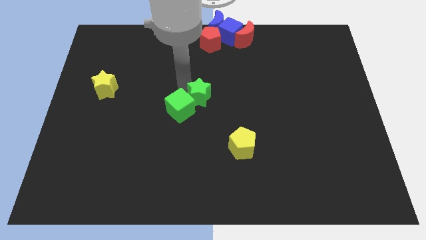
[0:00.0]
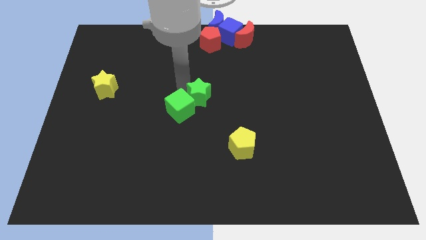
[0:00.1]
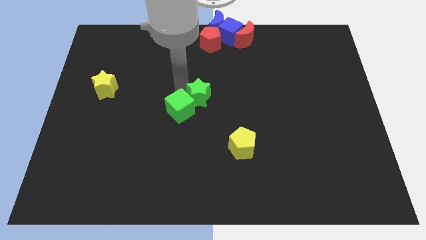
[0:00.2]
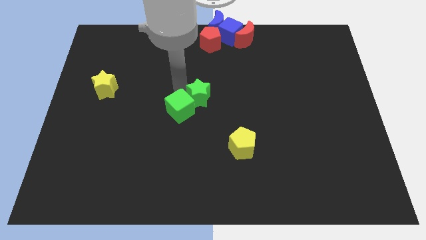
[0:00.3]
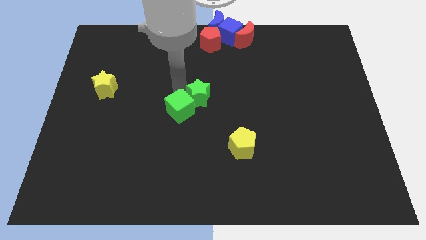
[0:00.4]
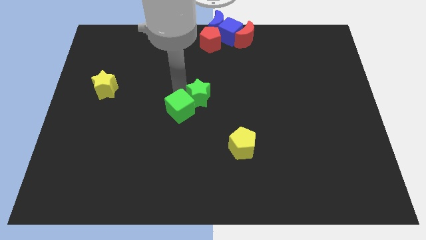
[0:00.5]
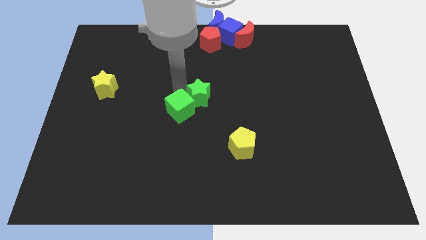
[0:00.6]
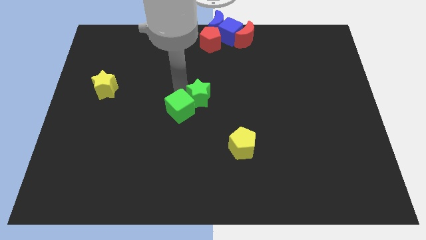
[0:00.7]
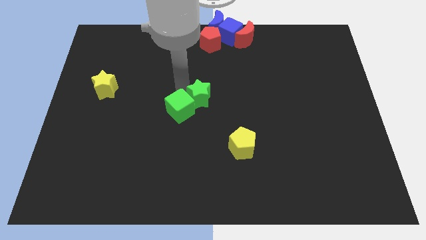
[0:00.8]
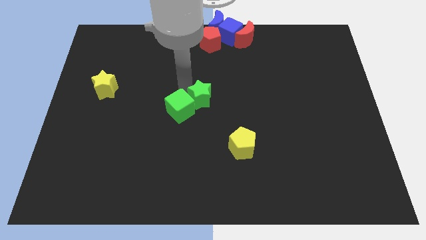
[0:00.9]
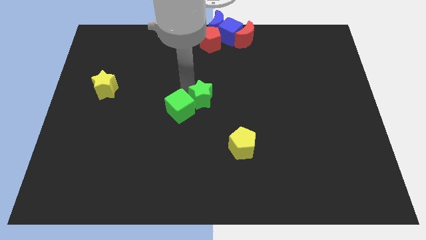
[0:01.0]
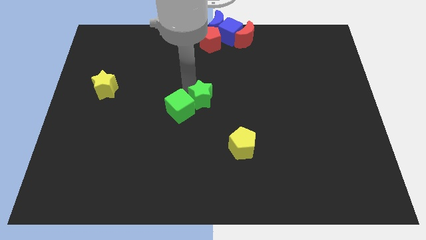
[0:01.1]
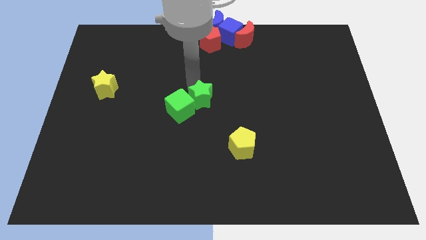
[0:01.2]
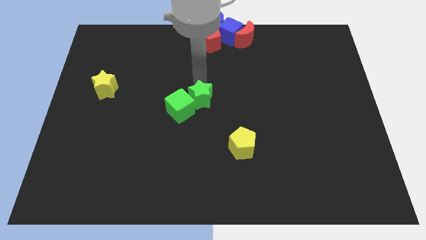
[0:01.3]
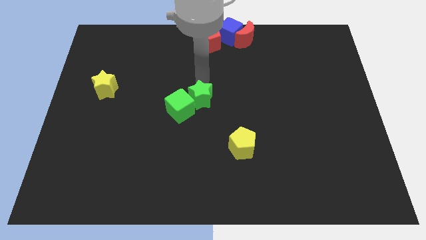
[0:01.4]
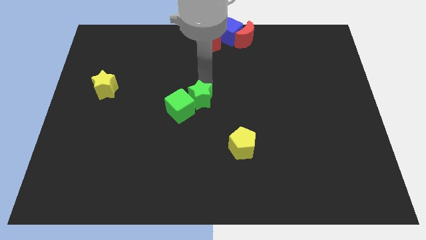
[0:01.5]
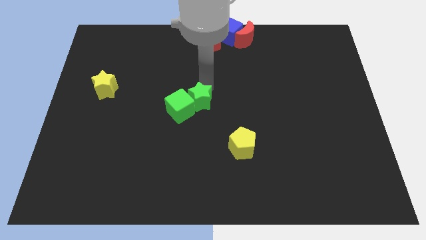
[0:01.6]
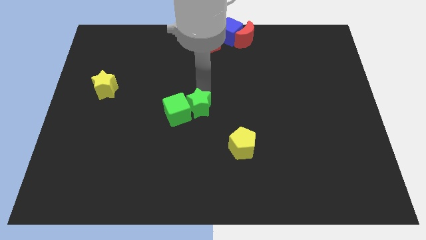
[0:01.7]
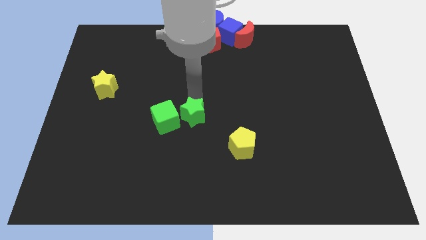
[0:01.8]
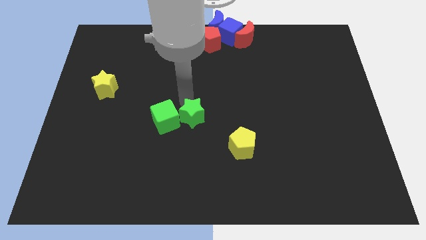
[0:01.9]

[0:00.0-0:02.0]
push the green blocks slightly downwards

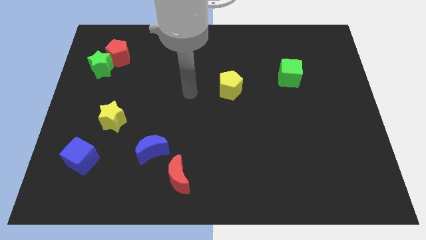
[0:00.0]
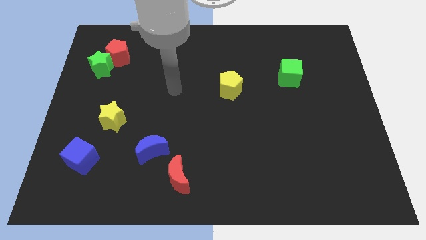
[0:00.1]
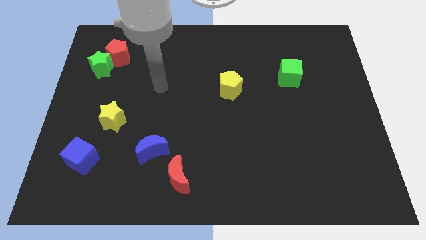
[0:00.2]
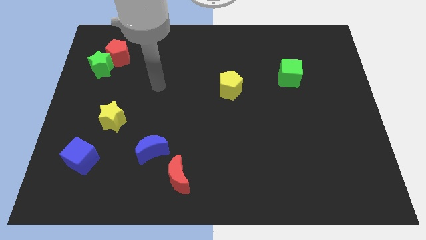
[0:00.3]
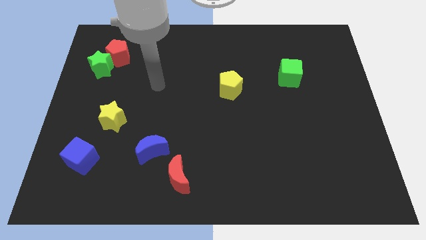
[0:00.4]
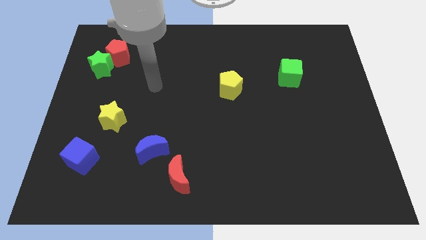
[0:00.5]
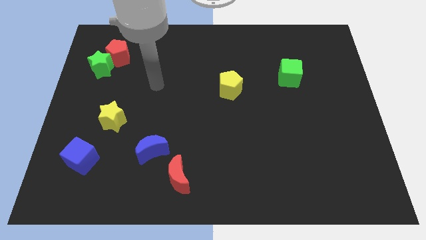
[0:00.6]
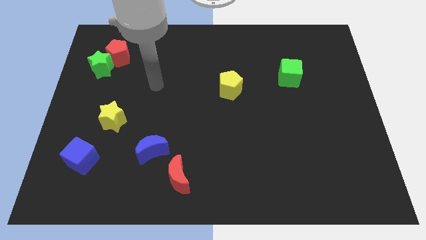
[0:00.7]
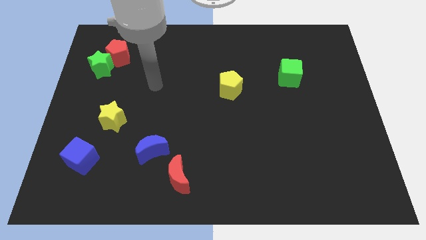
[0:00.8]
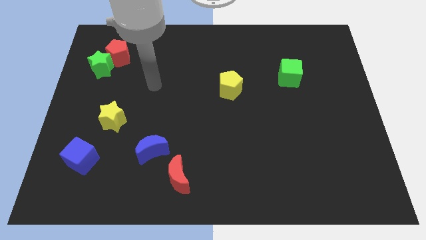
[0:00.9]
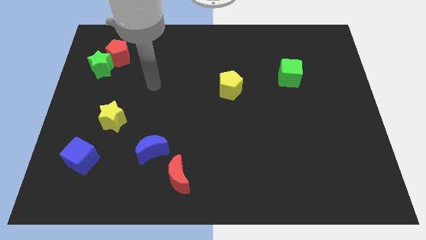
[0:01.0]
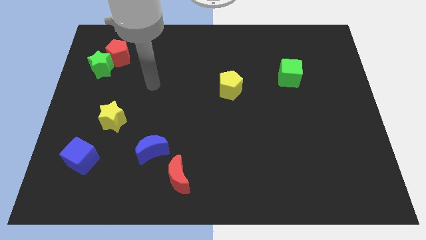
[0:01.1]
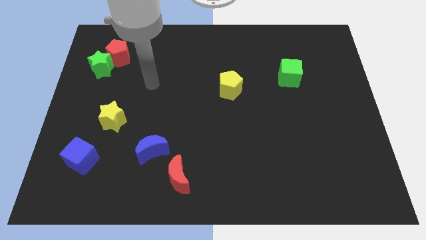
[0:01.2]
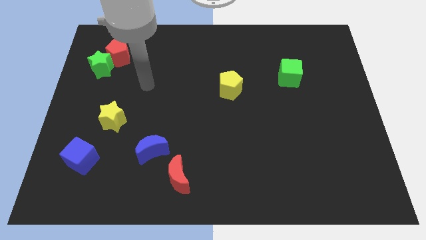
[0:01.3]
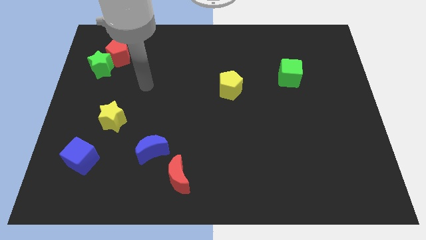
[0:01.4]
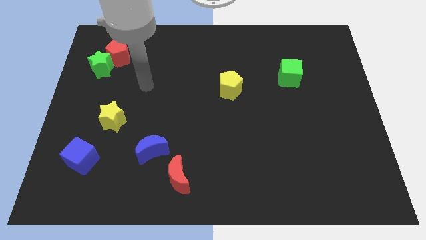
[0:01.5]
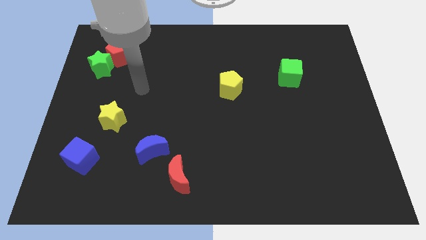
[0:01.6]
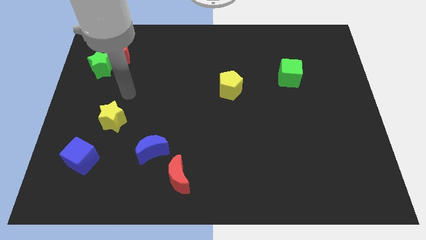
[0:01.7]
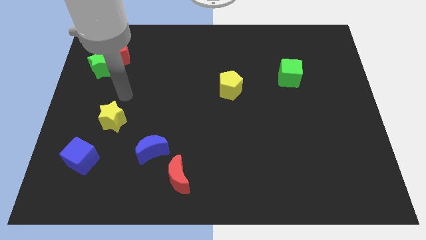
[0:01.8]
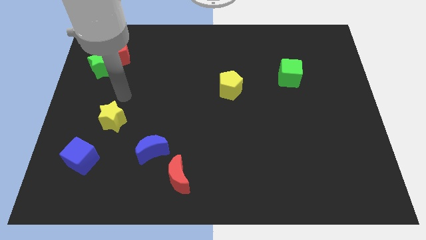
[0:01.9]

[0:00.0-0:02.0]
move your arm towards the top side of the yellow star

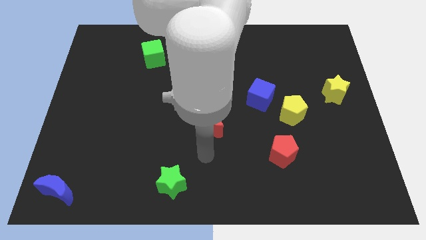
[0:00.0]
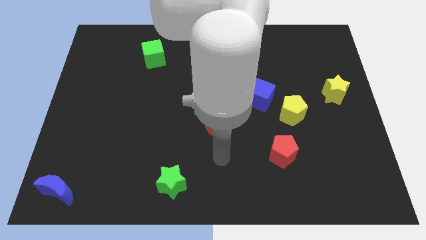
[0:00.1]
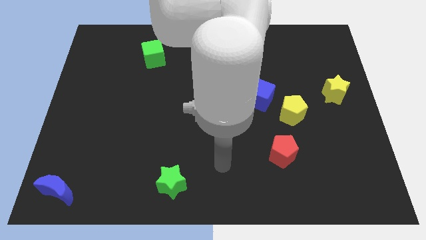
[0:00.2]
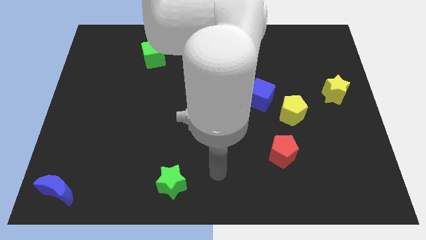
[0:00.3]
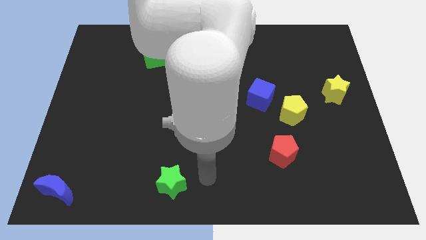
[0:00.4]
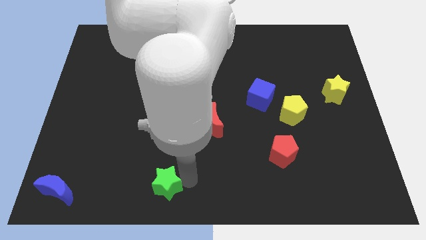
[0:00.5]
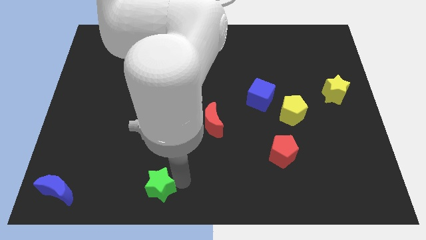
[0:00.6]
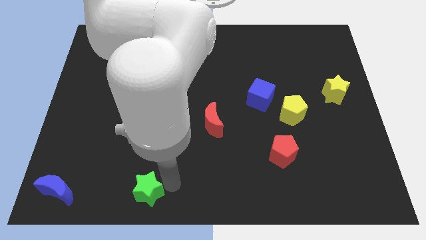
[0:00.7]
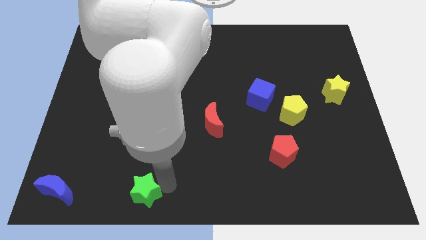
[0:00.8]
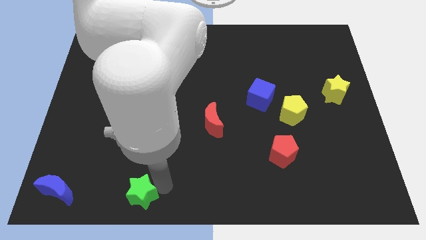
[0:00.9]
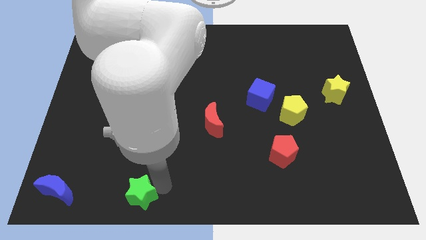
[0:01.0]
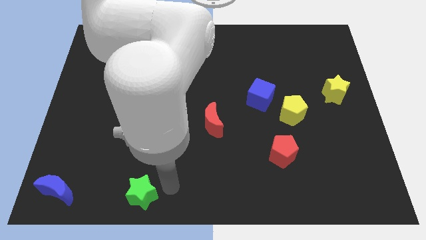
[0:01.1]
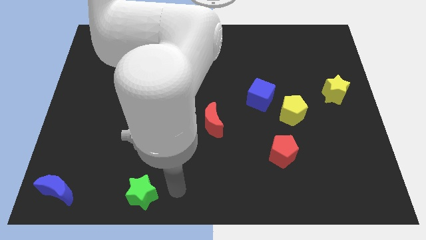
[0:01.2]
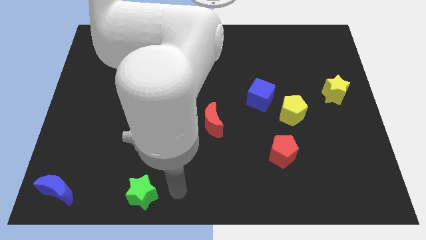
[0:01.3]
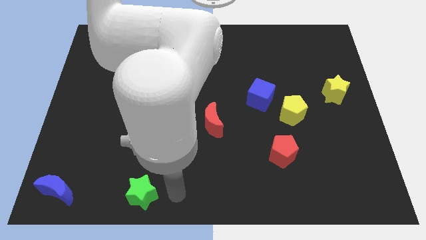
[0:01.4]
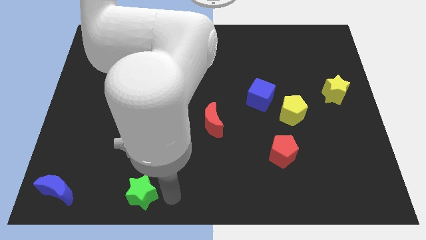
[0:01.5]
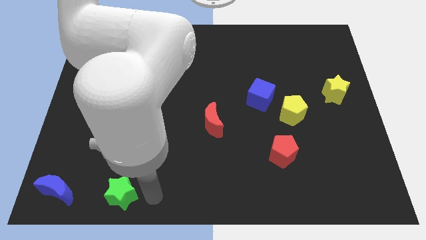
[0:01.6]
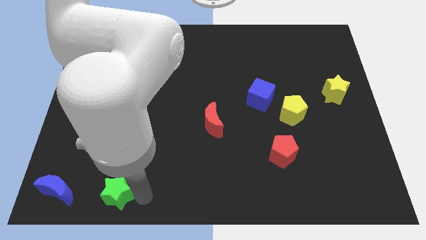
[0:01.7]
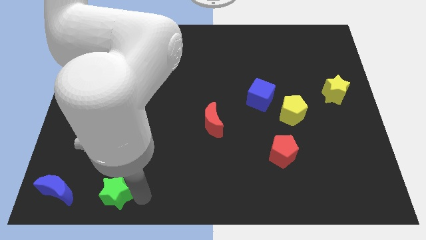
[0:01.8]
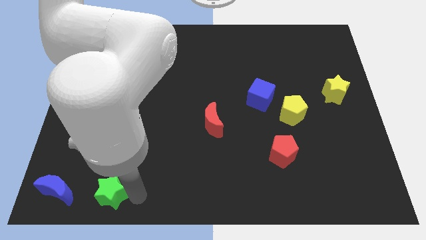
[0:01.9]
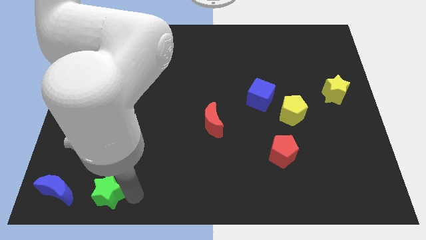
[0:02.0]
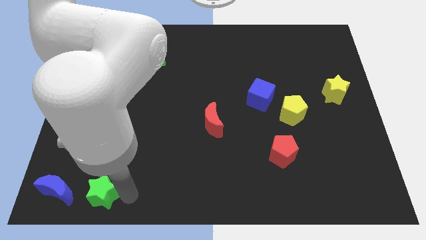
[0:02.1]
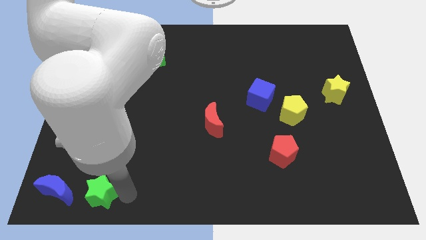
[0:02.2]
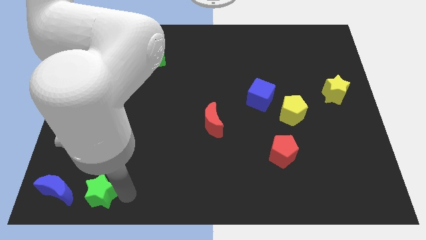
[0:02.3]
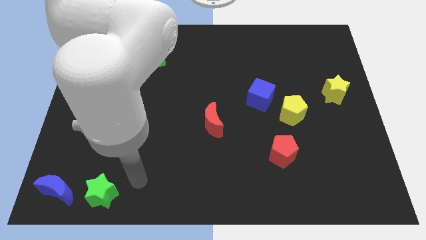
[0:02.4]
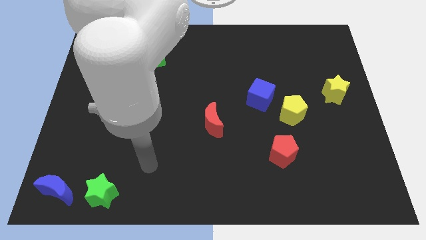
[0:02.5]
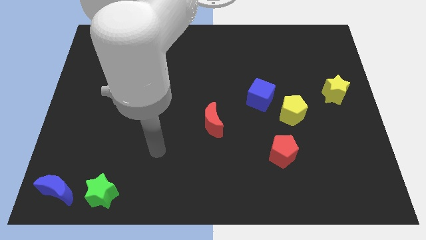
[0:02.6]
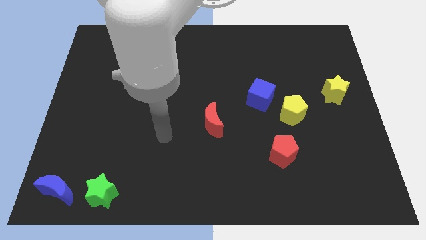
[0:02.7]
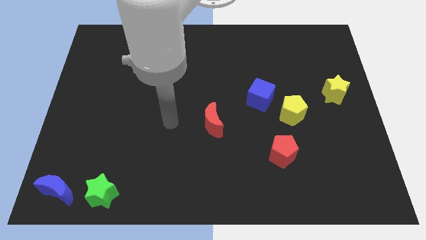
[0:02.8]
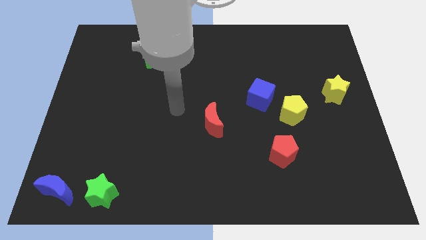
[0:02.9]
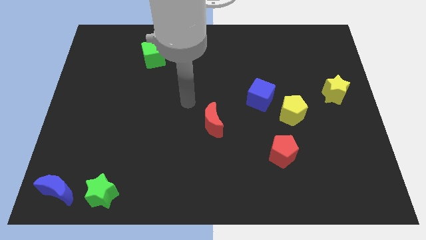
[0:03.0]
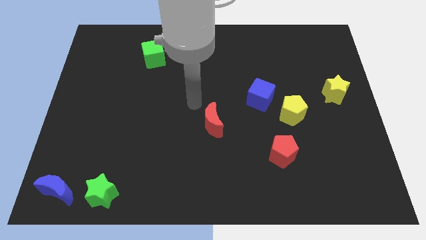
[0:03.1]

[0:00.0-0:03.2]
push the green star close to the blue crescent

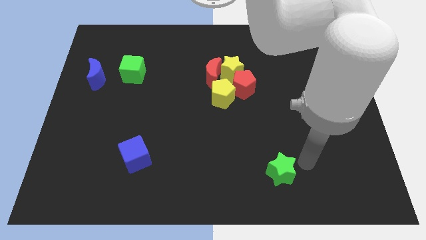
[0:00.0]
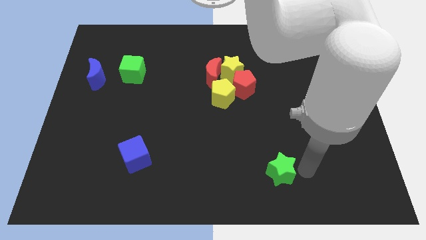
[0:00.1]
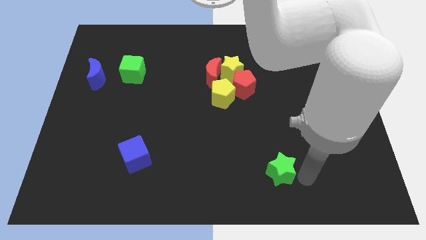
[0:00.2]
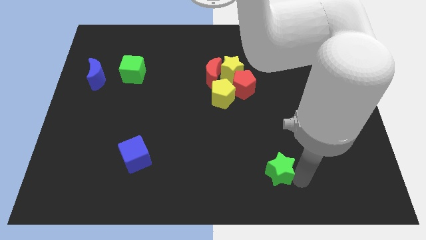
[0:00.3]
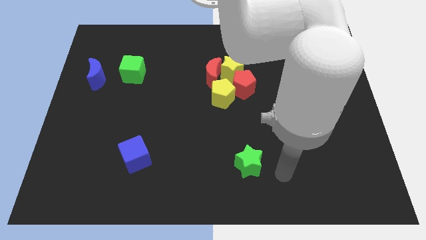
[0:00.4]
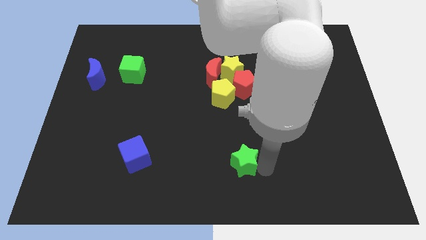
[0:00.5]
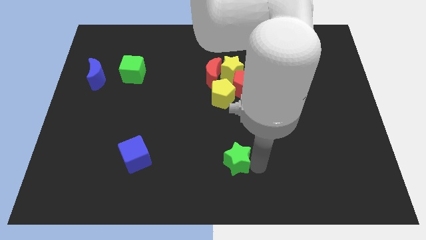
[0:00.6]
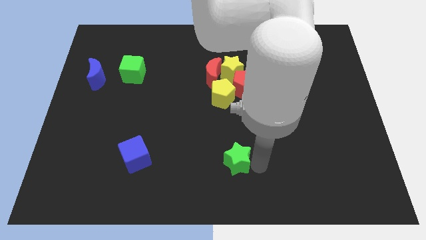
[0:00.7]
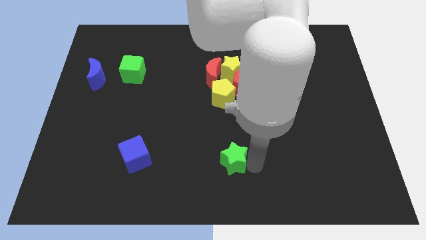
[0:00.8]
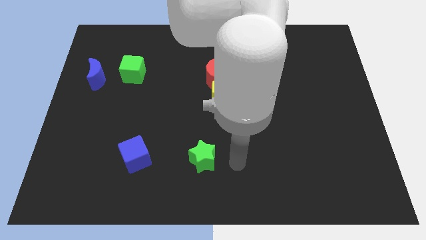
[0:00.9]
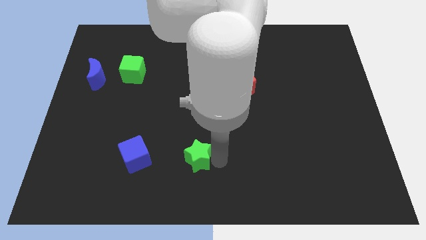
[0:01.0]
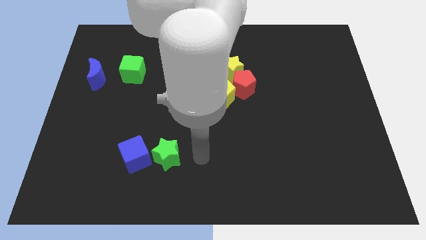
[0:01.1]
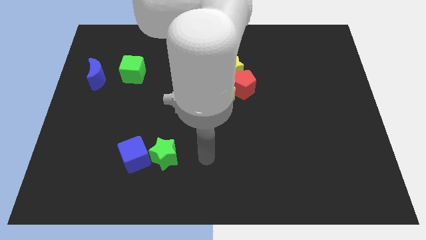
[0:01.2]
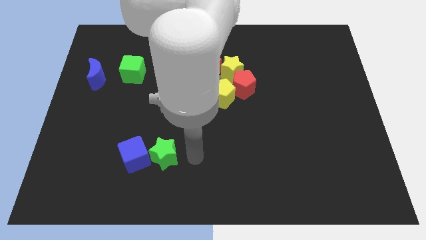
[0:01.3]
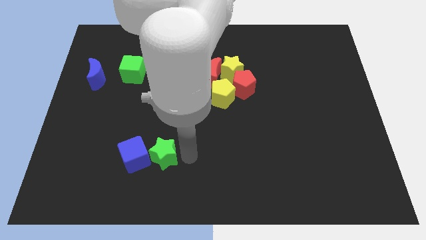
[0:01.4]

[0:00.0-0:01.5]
move the green star to the right of the blue cube

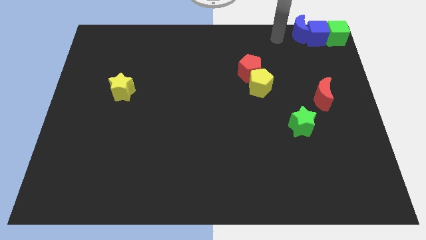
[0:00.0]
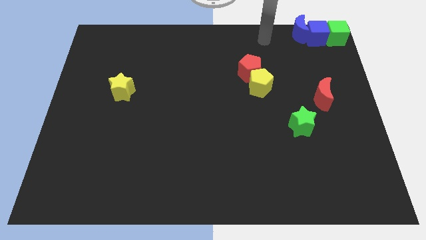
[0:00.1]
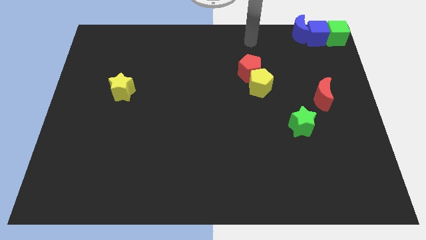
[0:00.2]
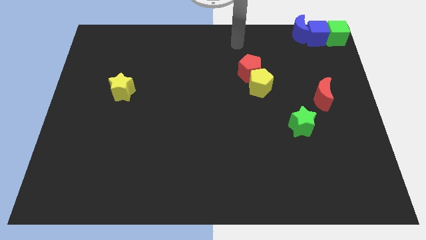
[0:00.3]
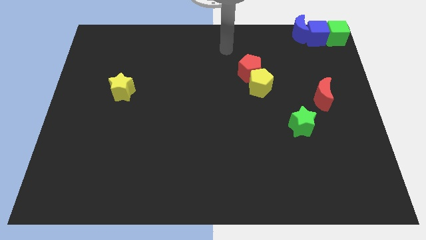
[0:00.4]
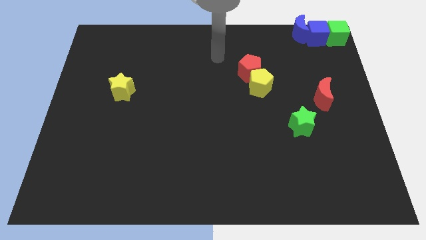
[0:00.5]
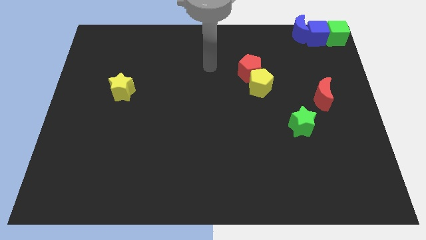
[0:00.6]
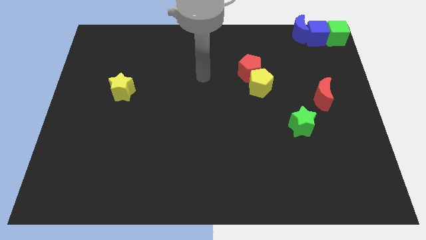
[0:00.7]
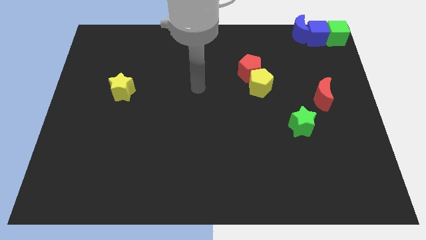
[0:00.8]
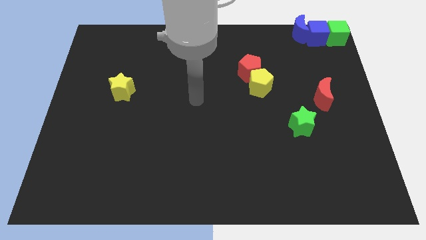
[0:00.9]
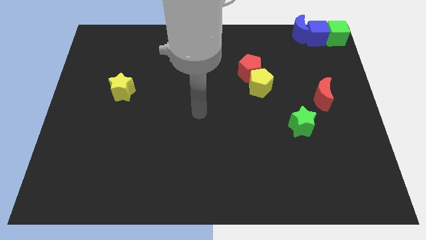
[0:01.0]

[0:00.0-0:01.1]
place your hand at the center of the board
